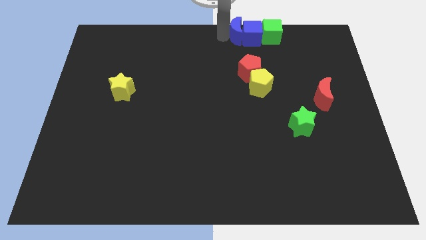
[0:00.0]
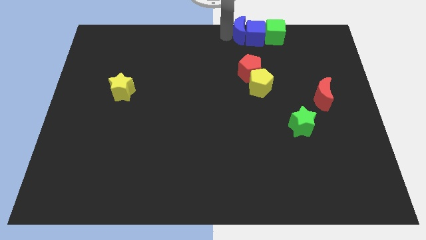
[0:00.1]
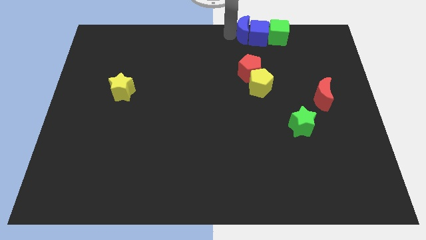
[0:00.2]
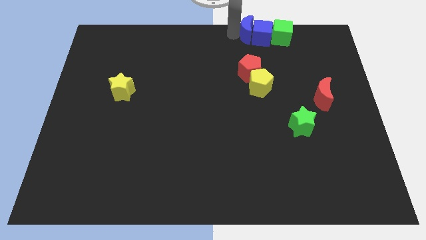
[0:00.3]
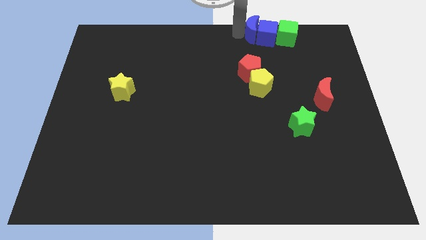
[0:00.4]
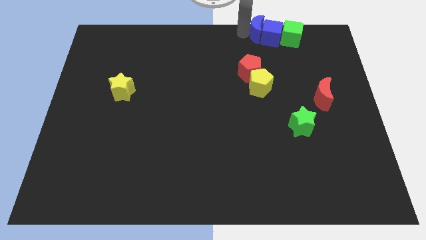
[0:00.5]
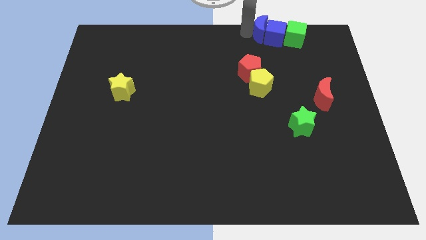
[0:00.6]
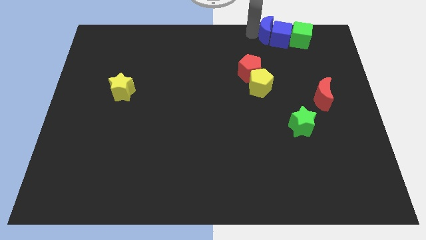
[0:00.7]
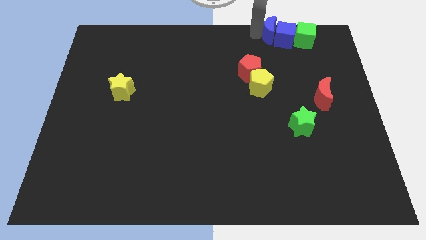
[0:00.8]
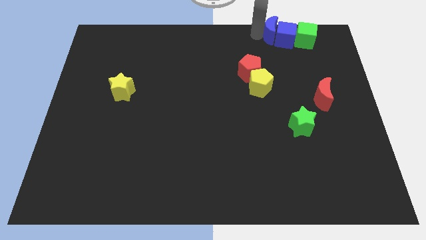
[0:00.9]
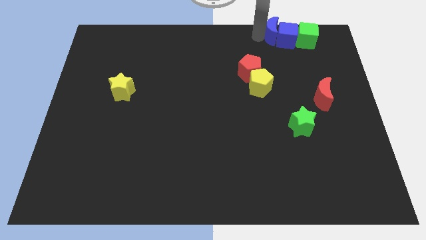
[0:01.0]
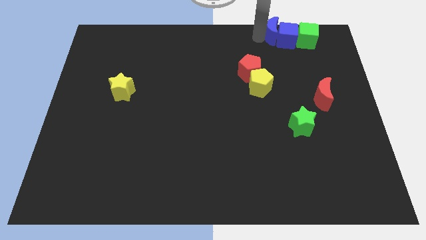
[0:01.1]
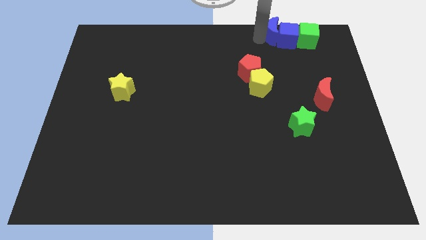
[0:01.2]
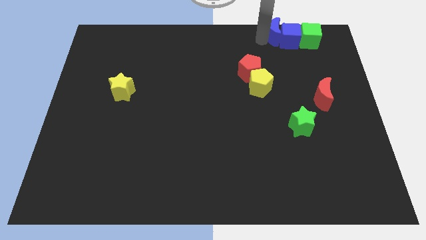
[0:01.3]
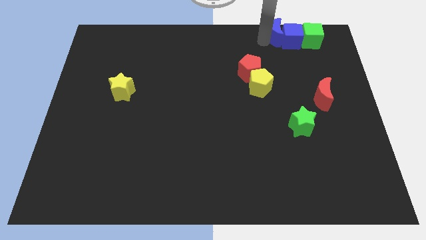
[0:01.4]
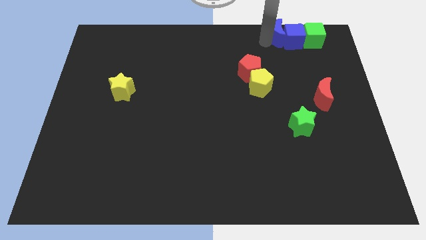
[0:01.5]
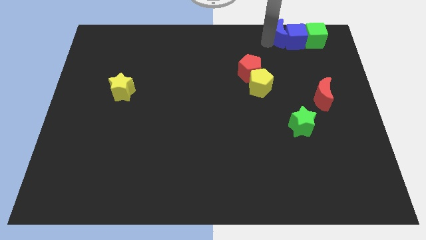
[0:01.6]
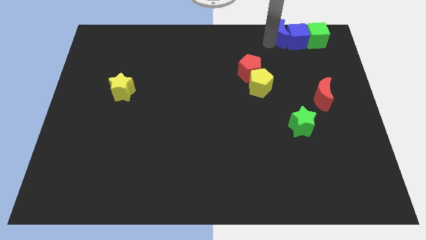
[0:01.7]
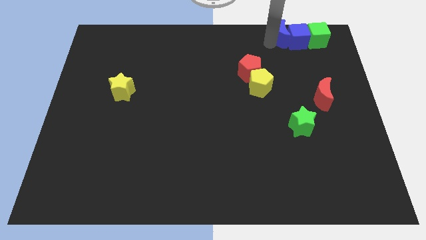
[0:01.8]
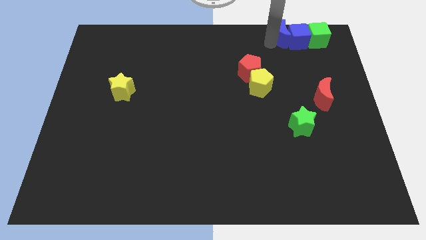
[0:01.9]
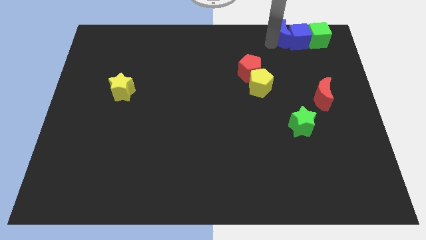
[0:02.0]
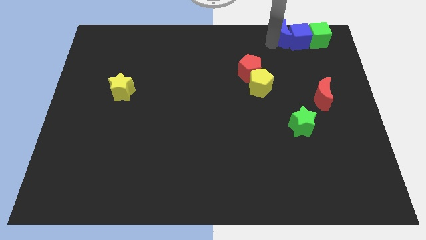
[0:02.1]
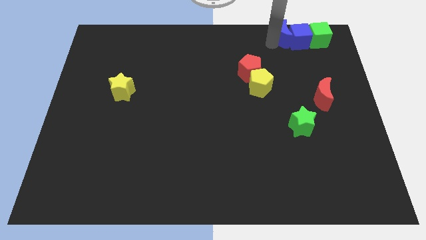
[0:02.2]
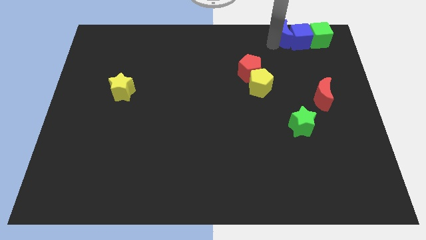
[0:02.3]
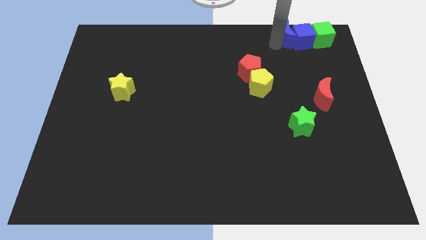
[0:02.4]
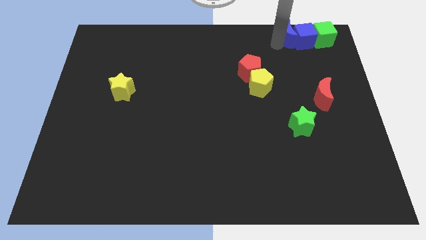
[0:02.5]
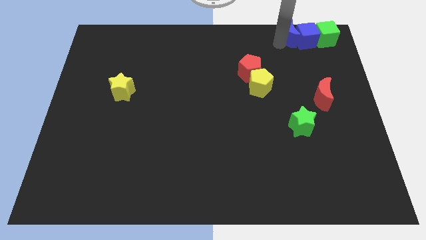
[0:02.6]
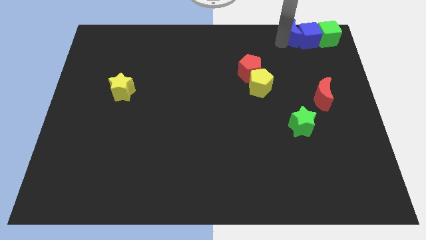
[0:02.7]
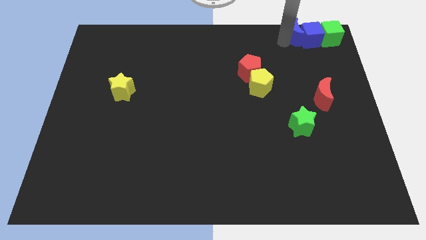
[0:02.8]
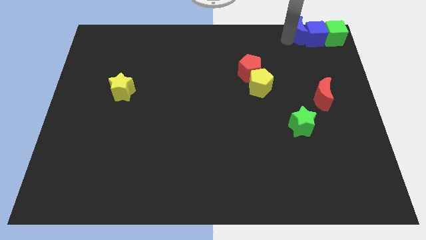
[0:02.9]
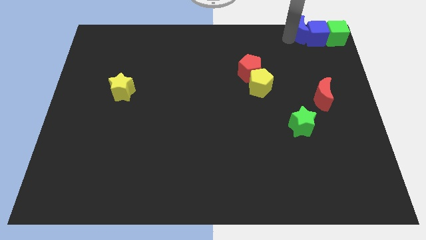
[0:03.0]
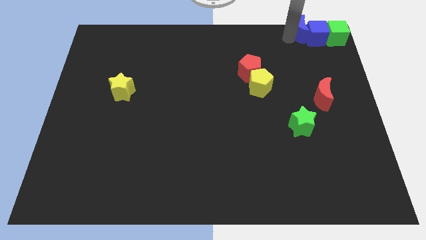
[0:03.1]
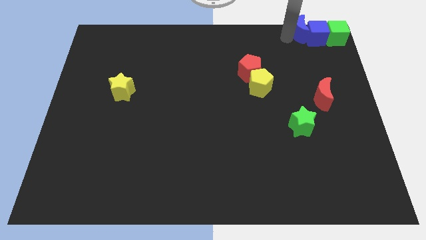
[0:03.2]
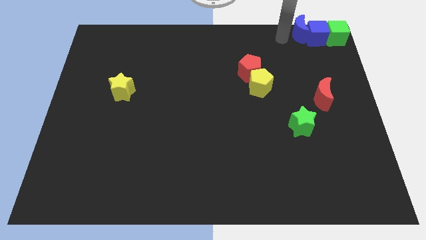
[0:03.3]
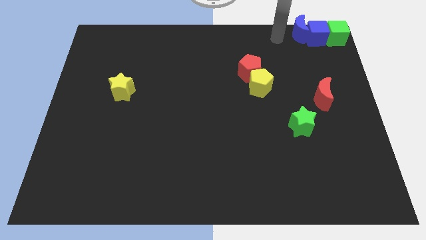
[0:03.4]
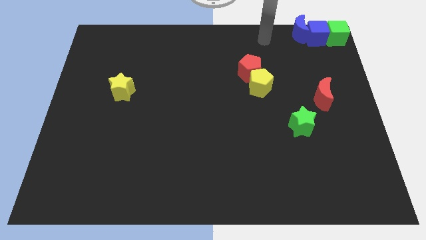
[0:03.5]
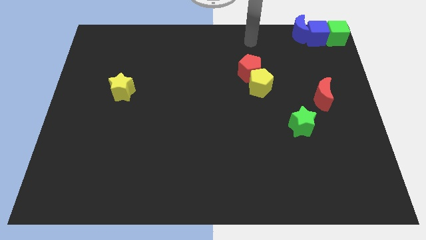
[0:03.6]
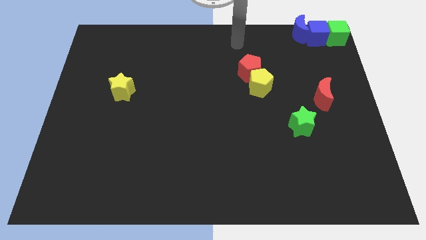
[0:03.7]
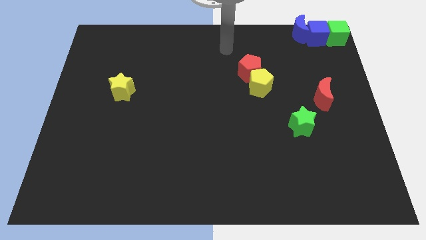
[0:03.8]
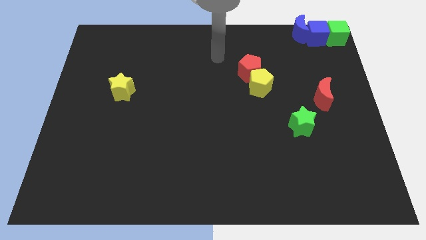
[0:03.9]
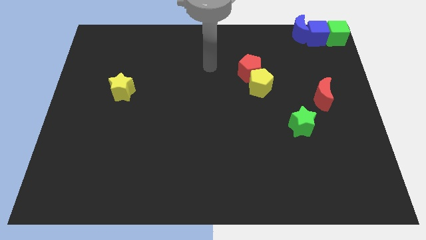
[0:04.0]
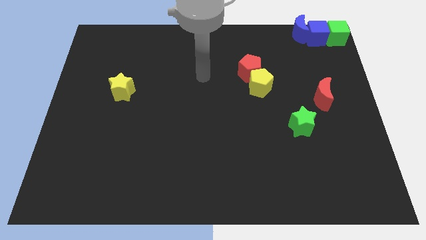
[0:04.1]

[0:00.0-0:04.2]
place the blue blocks and the green cube diagonally top right to the red pentagon

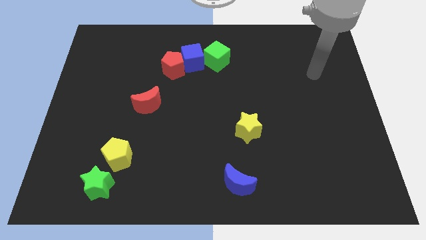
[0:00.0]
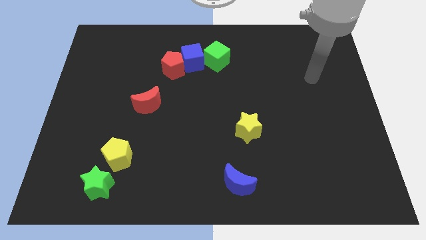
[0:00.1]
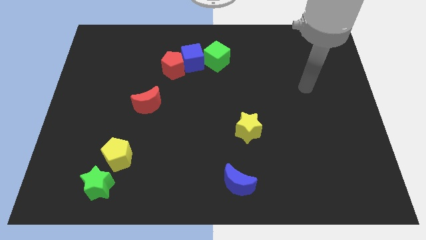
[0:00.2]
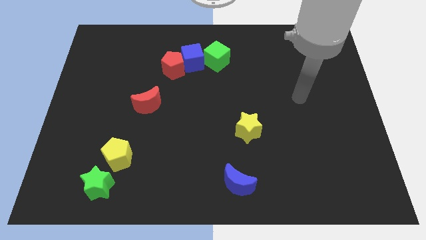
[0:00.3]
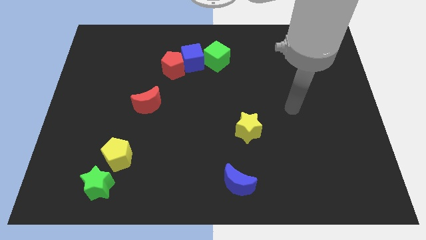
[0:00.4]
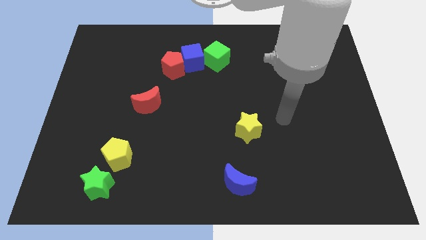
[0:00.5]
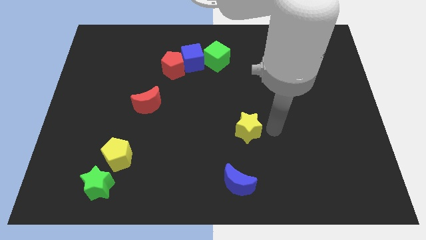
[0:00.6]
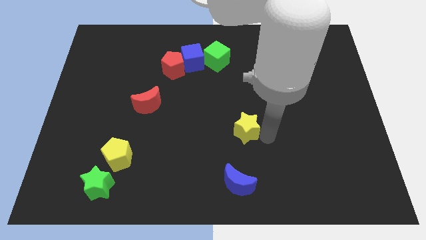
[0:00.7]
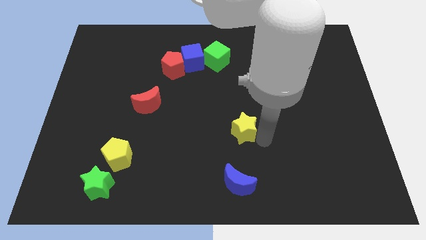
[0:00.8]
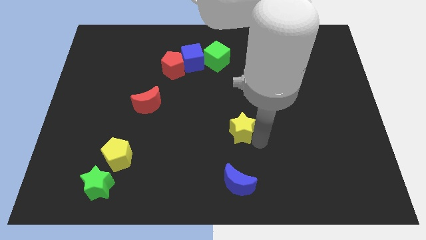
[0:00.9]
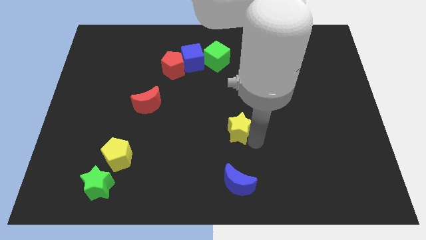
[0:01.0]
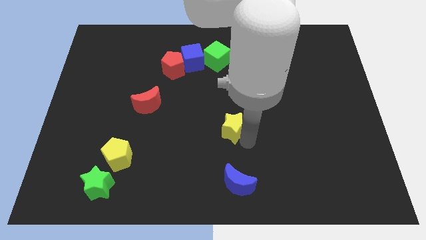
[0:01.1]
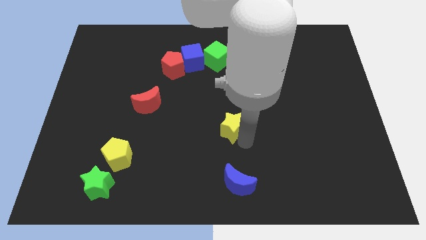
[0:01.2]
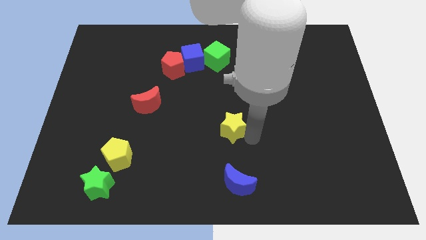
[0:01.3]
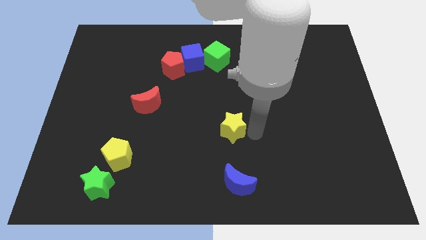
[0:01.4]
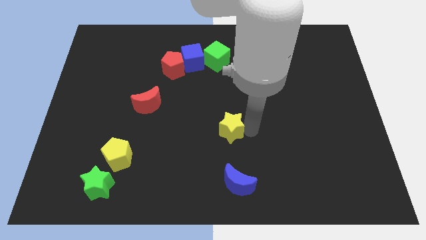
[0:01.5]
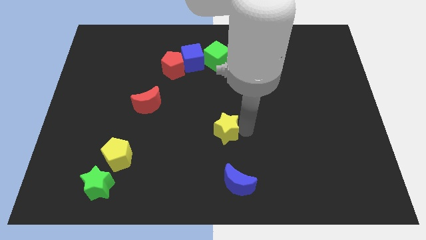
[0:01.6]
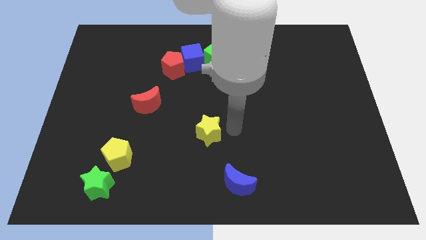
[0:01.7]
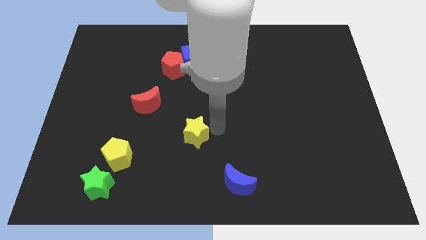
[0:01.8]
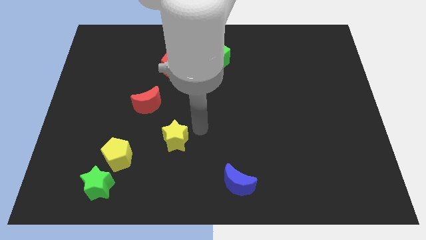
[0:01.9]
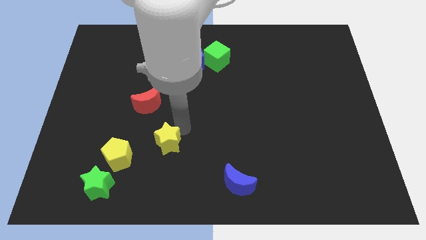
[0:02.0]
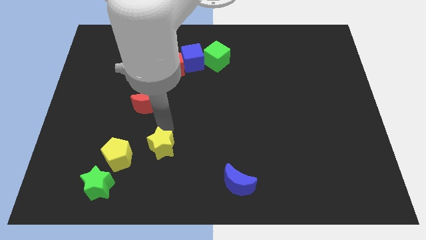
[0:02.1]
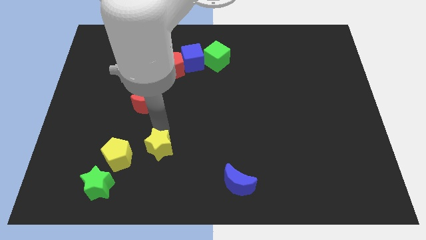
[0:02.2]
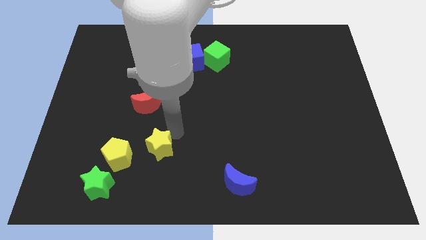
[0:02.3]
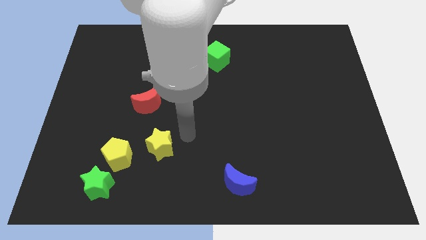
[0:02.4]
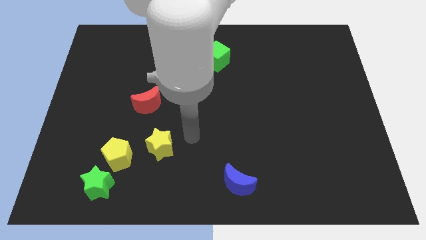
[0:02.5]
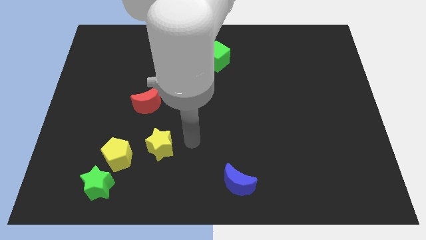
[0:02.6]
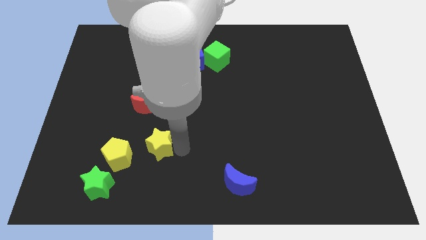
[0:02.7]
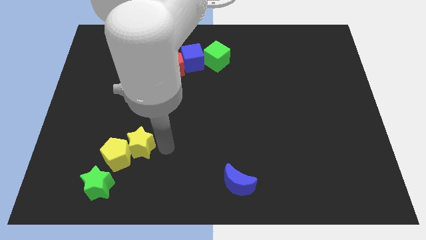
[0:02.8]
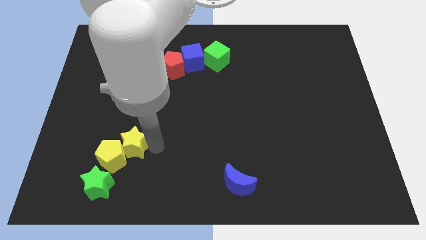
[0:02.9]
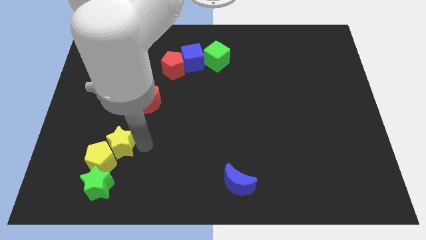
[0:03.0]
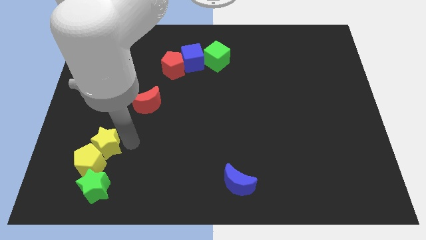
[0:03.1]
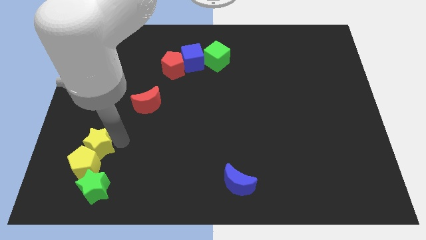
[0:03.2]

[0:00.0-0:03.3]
push yellow star towards bottom left corner

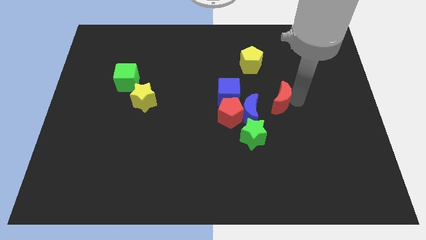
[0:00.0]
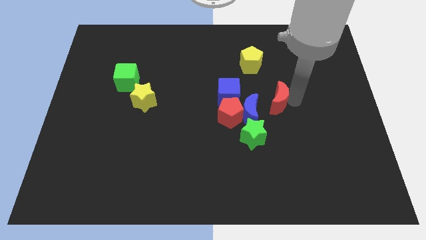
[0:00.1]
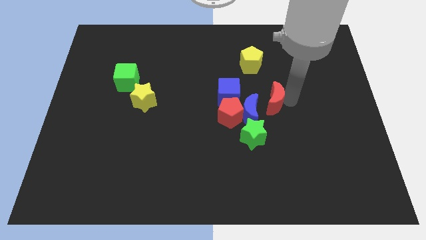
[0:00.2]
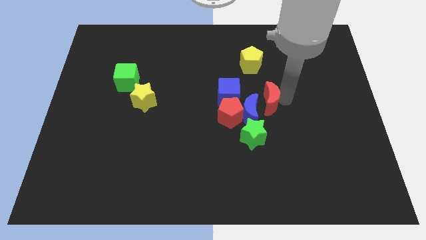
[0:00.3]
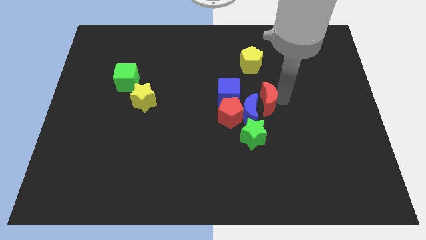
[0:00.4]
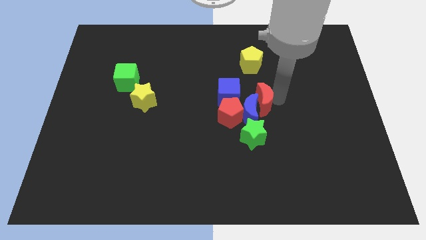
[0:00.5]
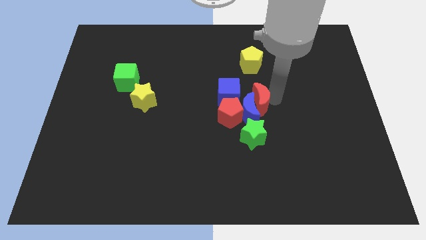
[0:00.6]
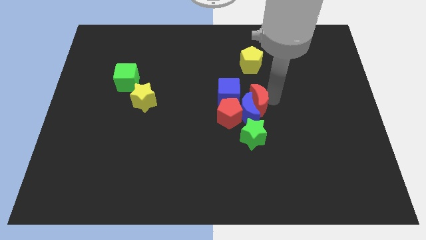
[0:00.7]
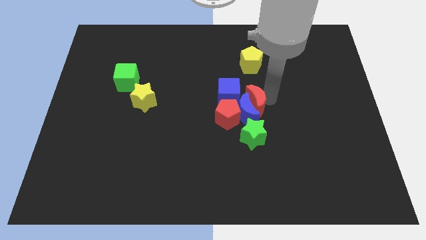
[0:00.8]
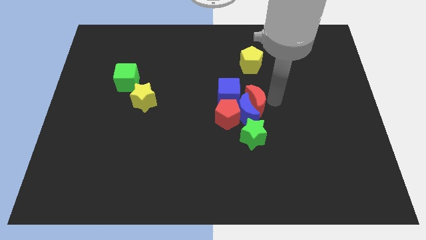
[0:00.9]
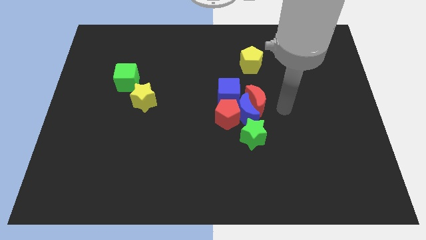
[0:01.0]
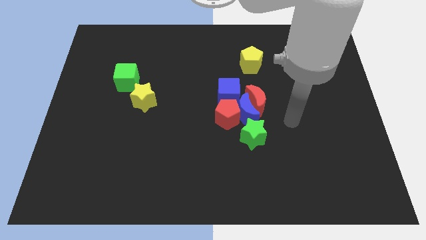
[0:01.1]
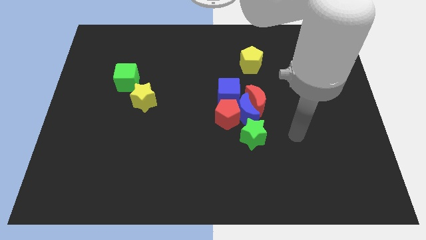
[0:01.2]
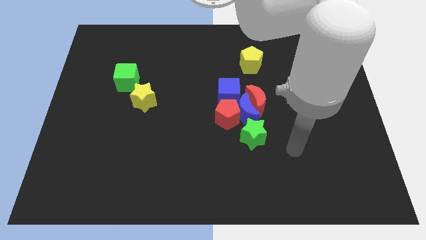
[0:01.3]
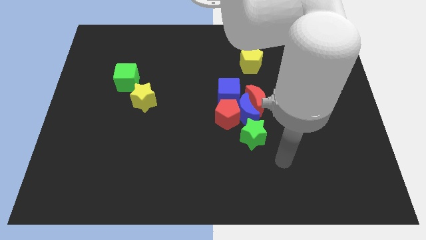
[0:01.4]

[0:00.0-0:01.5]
push the red crescent to the right side of the blue moon
